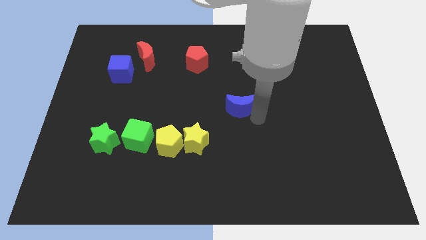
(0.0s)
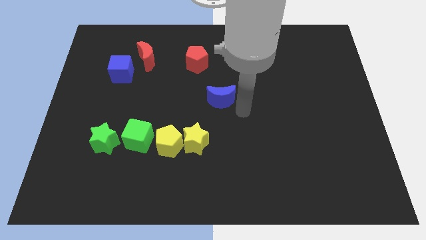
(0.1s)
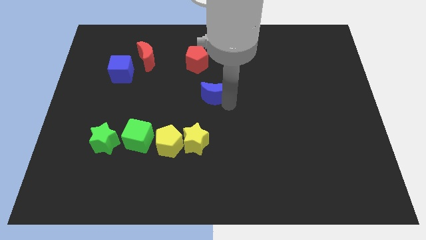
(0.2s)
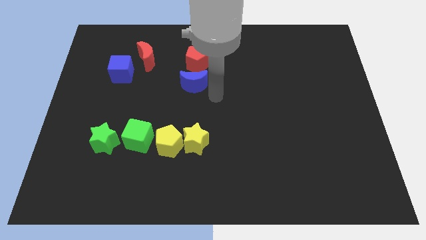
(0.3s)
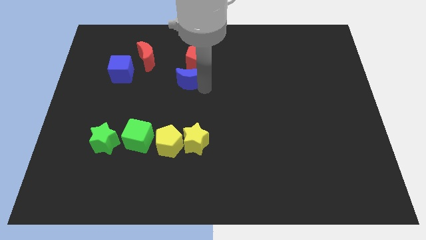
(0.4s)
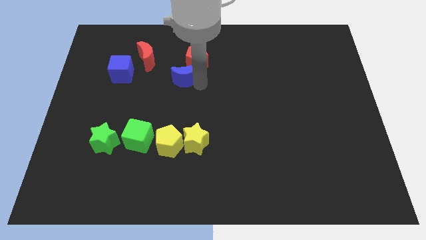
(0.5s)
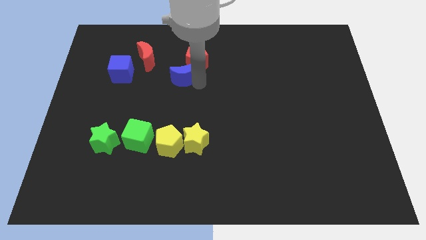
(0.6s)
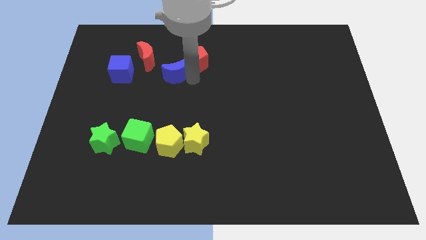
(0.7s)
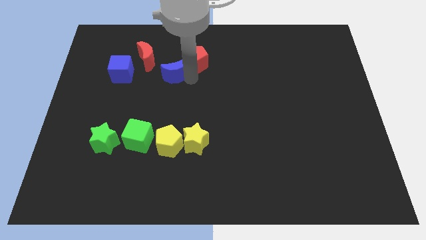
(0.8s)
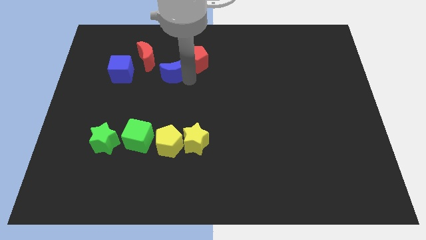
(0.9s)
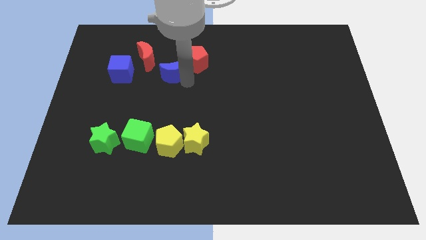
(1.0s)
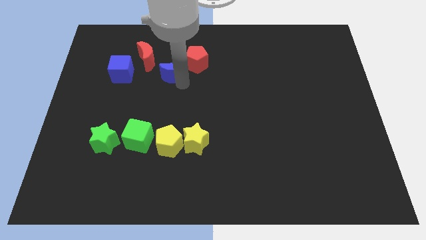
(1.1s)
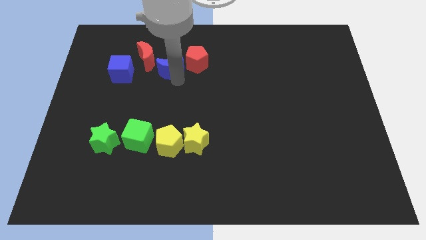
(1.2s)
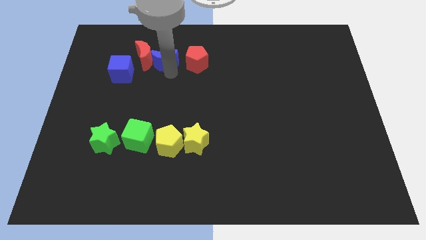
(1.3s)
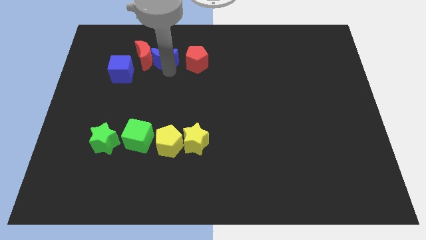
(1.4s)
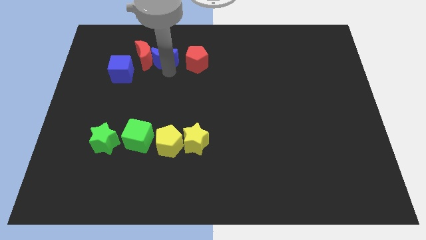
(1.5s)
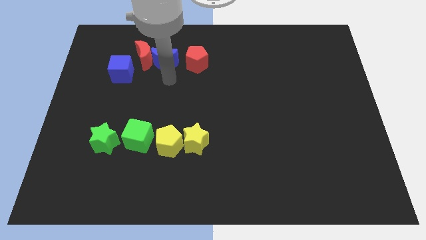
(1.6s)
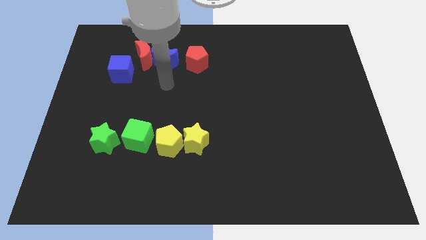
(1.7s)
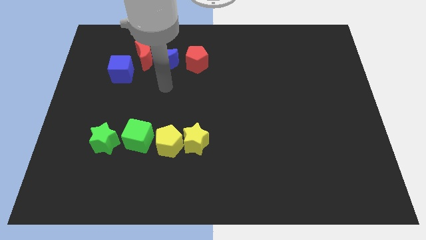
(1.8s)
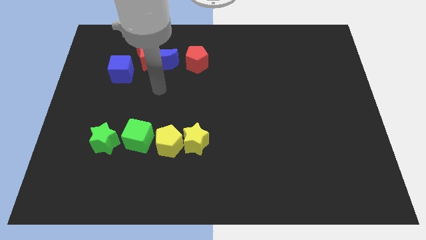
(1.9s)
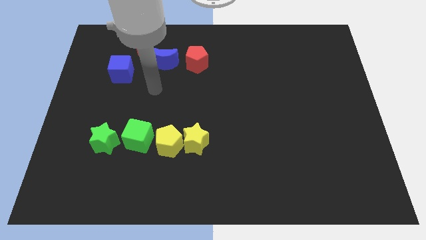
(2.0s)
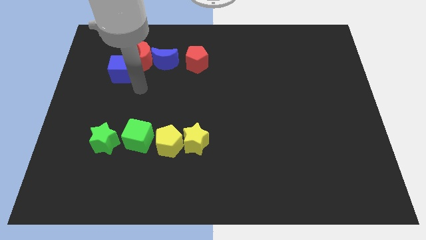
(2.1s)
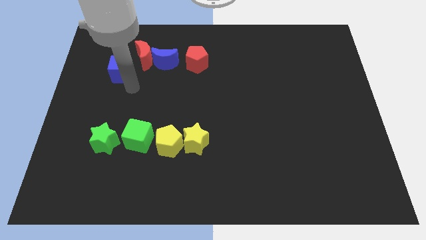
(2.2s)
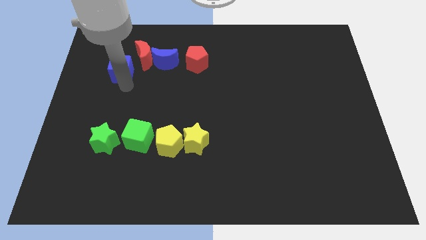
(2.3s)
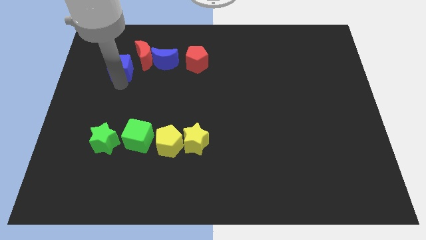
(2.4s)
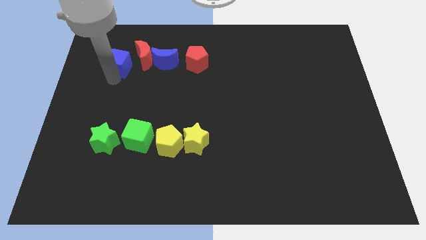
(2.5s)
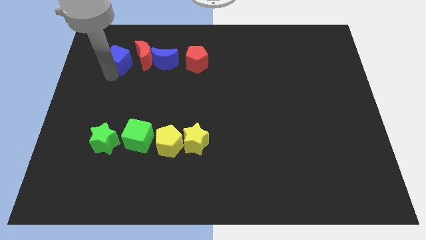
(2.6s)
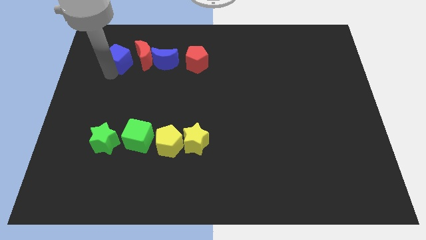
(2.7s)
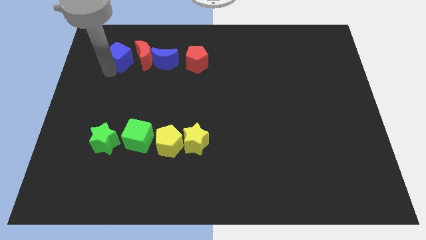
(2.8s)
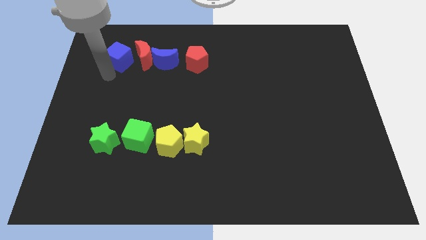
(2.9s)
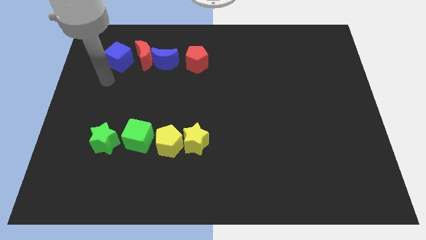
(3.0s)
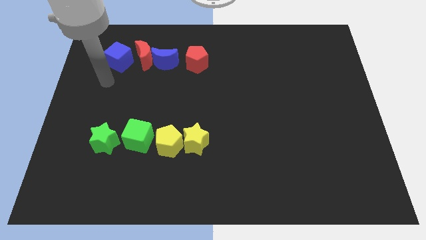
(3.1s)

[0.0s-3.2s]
line up the blue blocks and red blocks horizontally

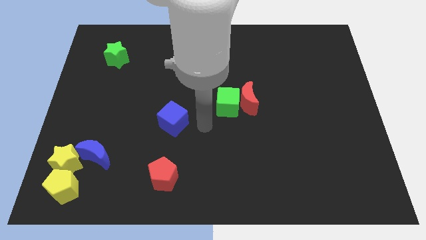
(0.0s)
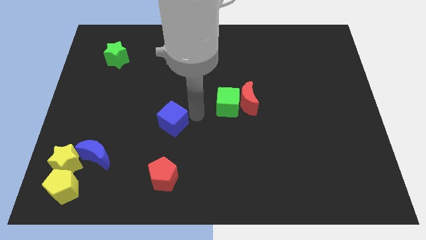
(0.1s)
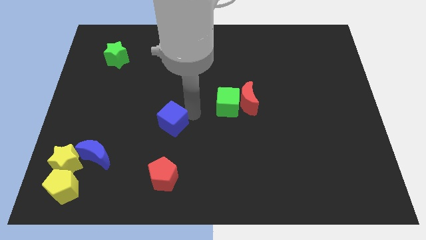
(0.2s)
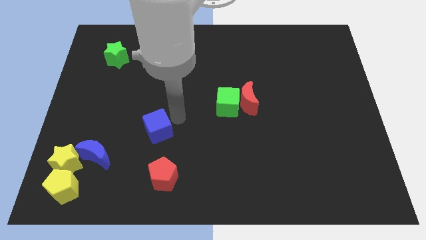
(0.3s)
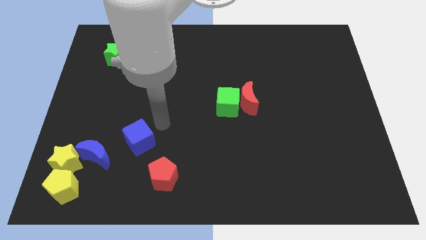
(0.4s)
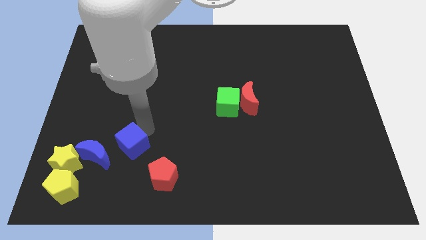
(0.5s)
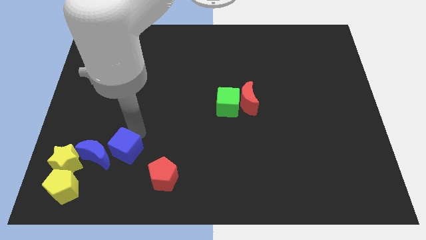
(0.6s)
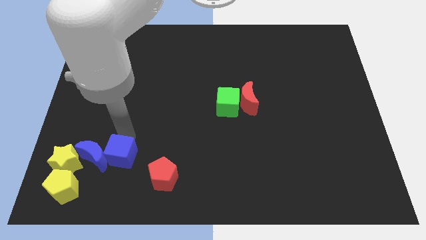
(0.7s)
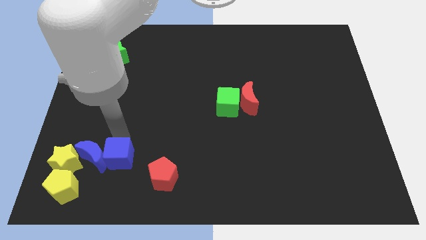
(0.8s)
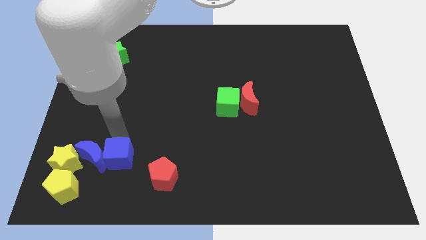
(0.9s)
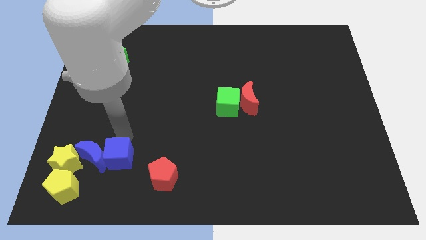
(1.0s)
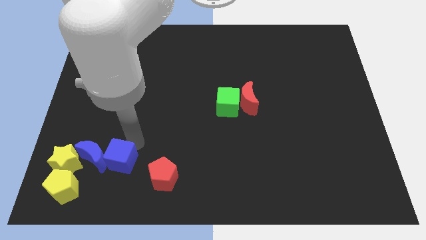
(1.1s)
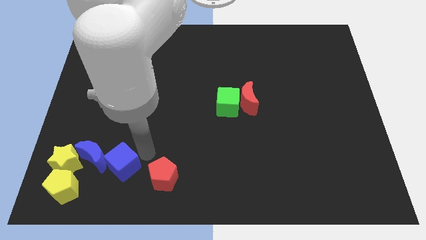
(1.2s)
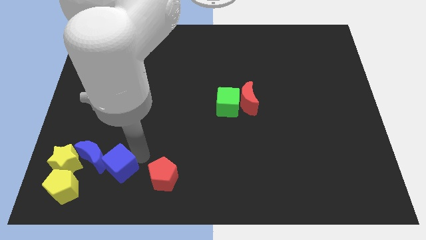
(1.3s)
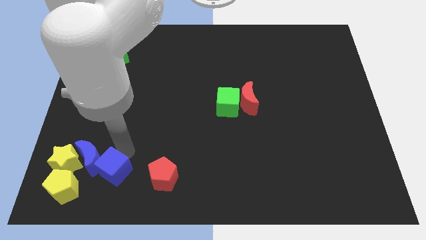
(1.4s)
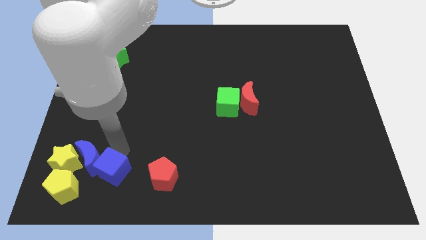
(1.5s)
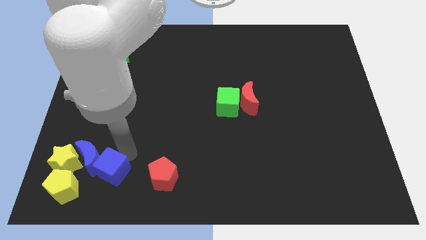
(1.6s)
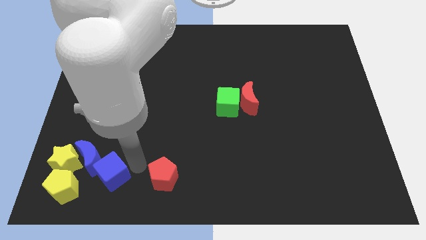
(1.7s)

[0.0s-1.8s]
push the blue cube right to the blue crescent

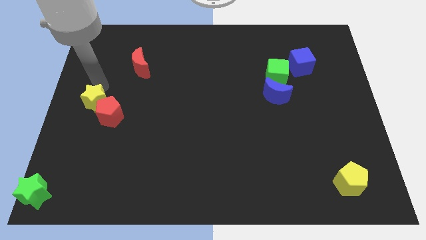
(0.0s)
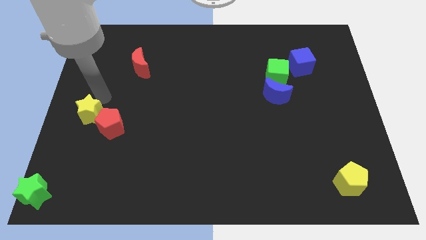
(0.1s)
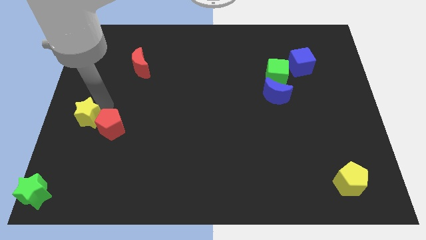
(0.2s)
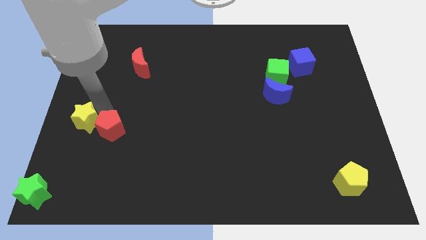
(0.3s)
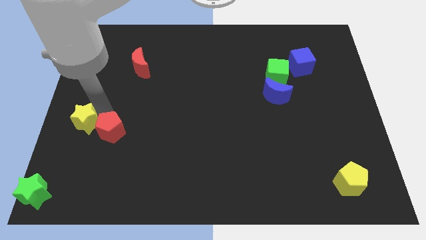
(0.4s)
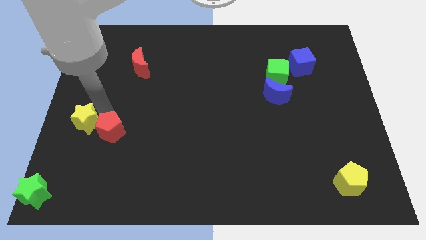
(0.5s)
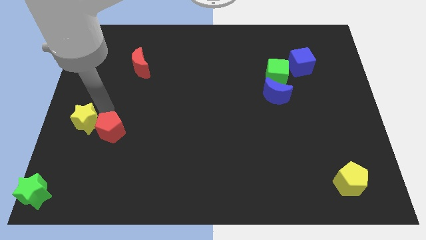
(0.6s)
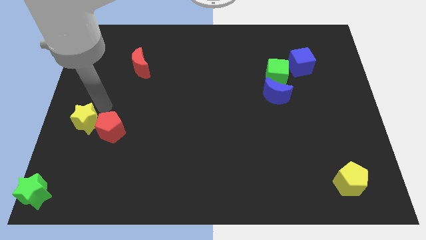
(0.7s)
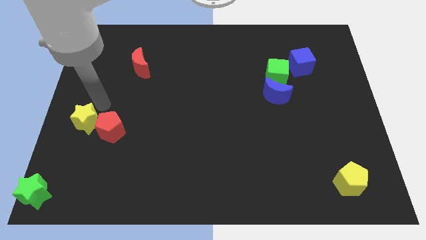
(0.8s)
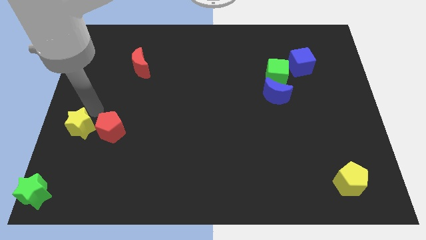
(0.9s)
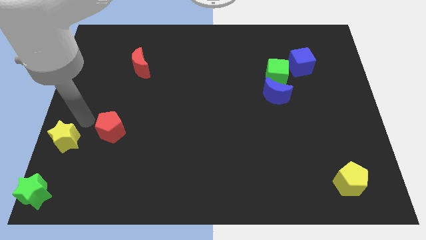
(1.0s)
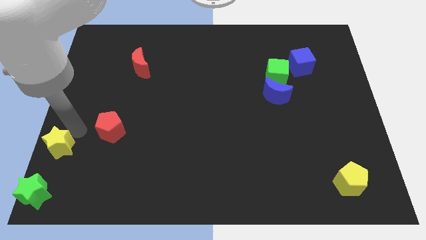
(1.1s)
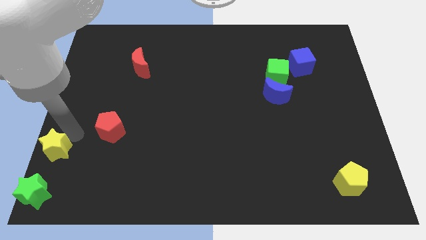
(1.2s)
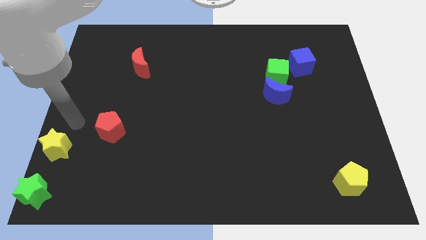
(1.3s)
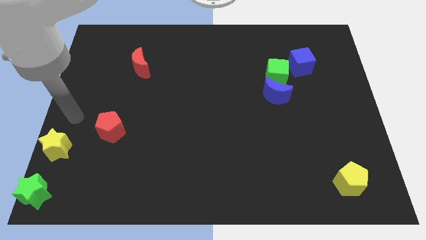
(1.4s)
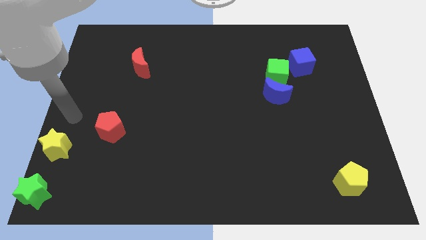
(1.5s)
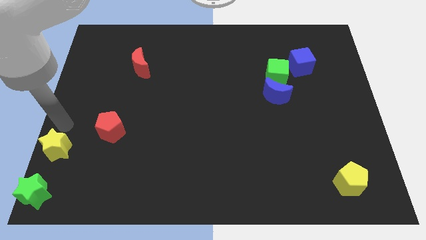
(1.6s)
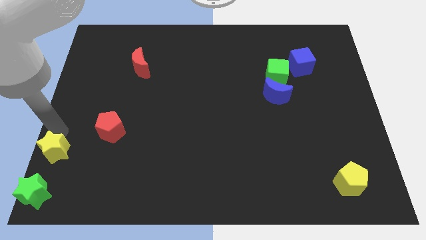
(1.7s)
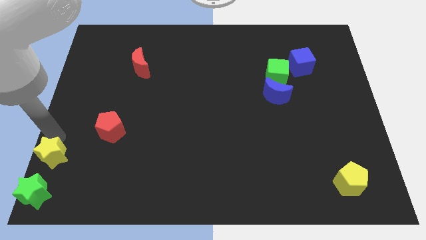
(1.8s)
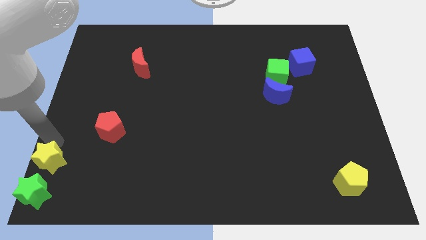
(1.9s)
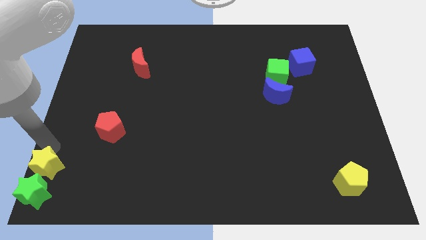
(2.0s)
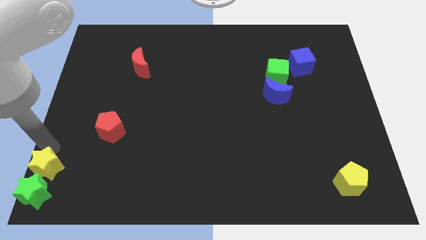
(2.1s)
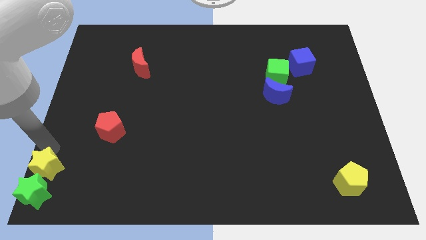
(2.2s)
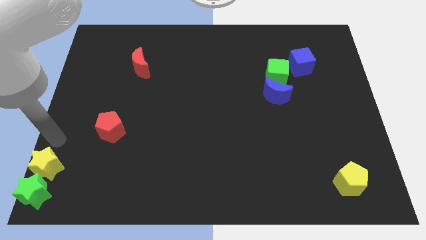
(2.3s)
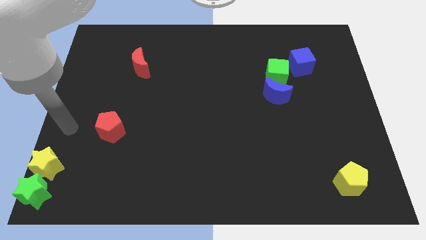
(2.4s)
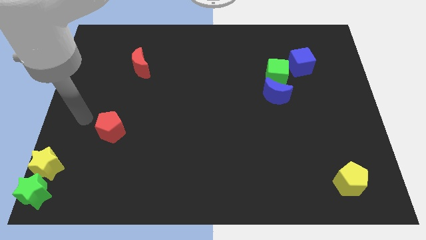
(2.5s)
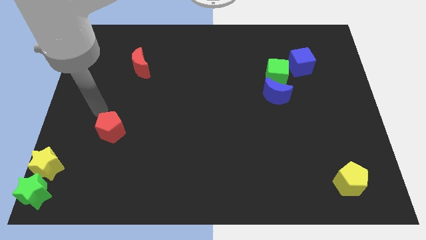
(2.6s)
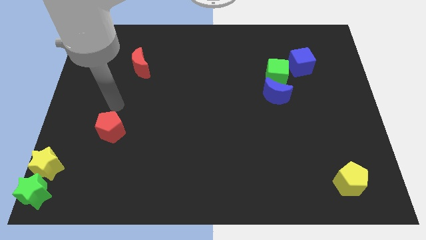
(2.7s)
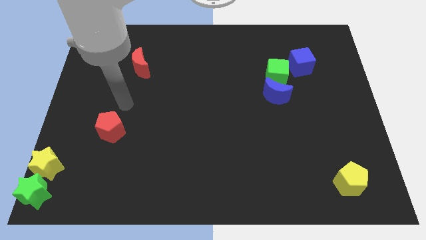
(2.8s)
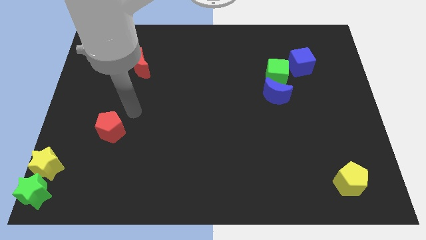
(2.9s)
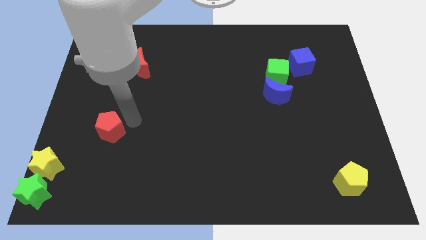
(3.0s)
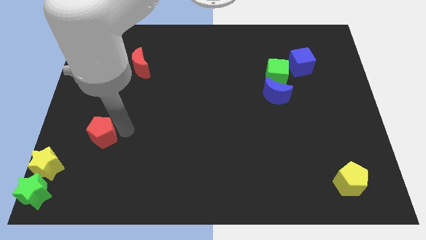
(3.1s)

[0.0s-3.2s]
push the yellow star into the green star

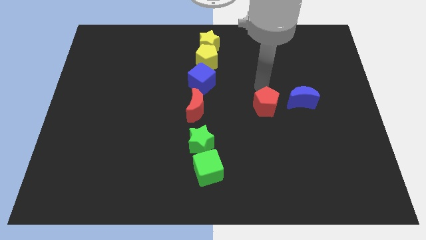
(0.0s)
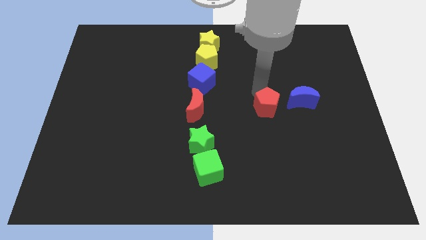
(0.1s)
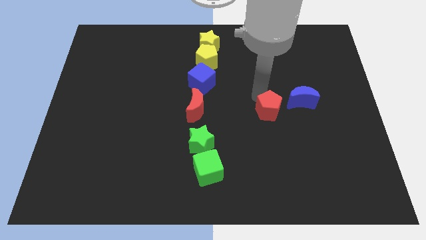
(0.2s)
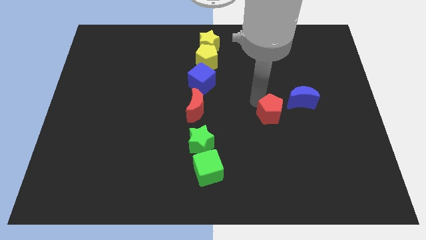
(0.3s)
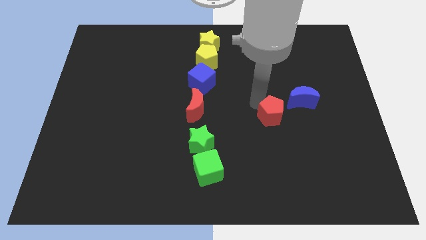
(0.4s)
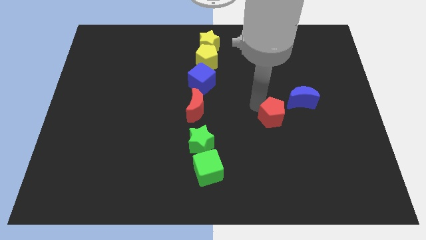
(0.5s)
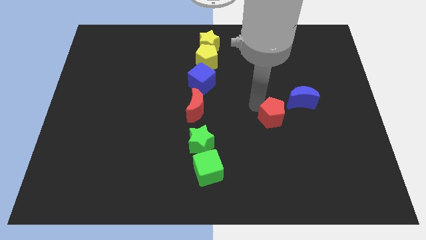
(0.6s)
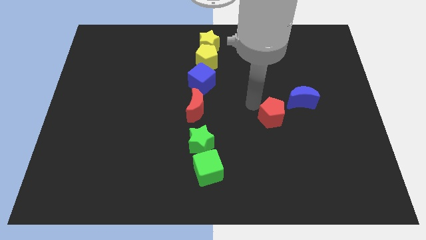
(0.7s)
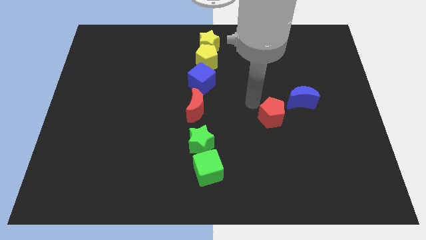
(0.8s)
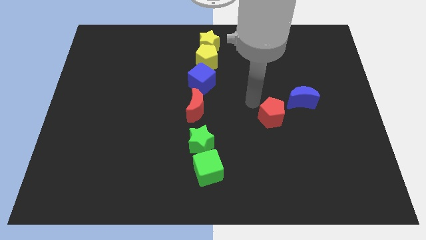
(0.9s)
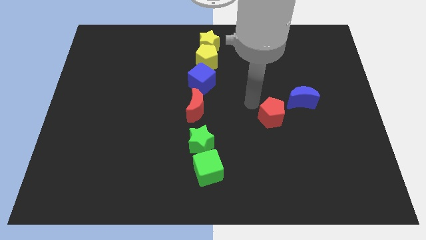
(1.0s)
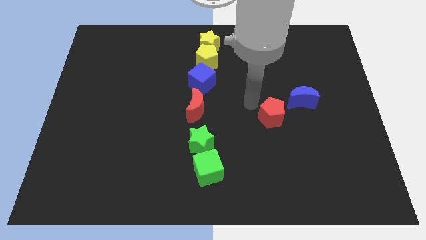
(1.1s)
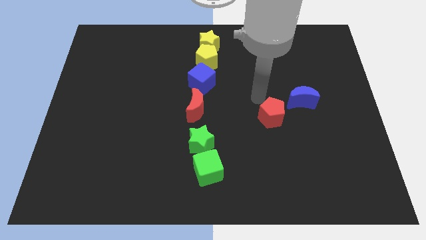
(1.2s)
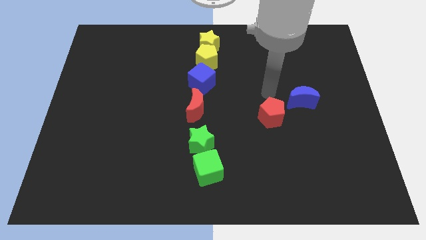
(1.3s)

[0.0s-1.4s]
push the red pentagon slightly towards the bottom
